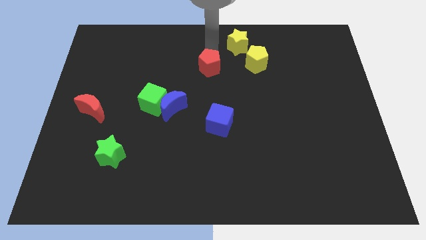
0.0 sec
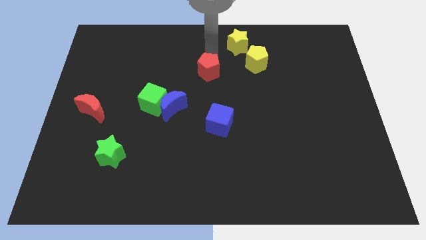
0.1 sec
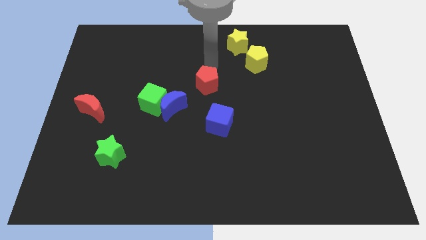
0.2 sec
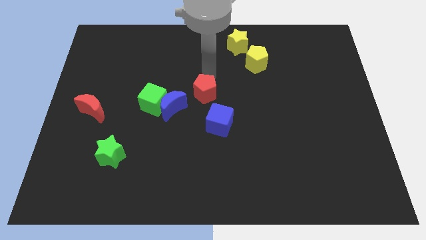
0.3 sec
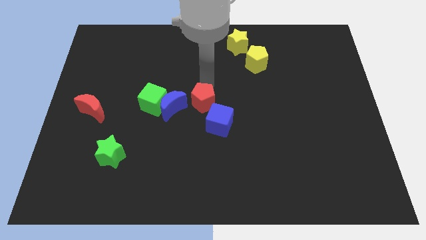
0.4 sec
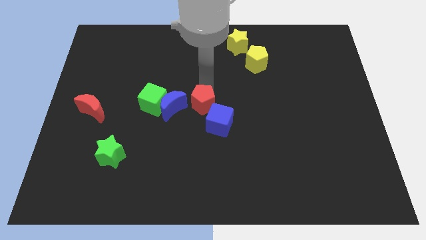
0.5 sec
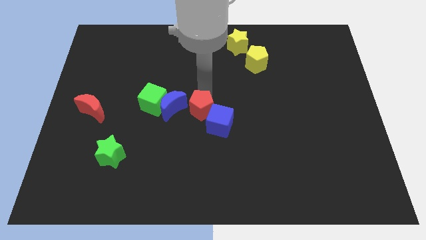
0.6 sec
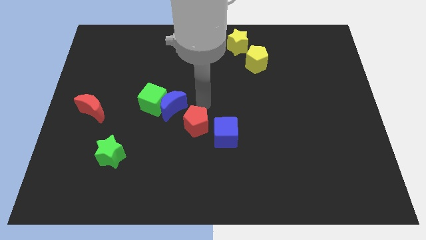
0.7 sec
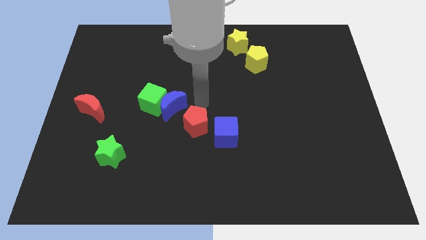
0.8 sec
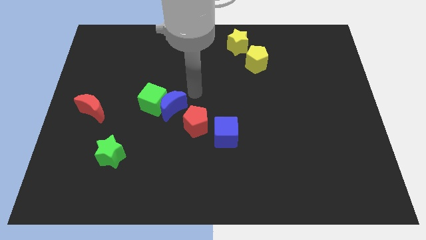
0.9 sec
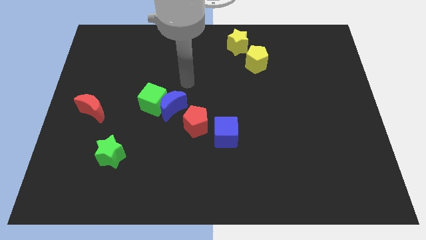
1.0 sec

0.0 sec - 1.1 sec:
push the red pentagon to the center of the board

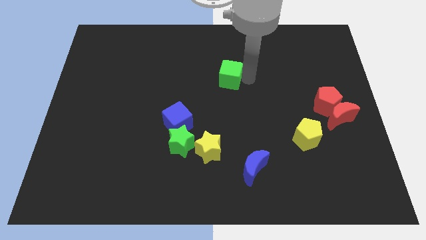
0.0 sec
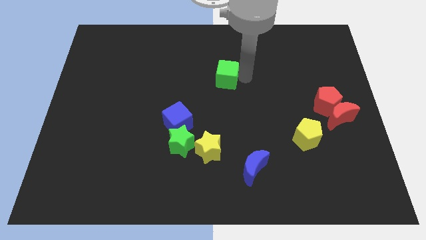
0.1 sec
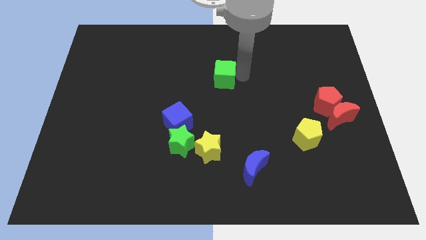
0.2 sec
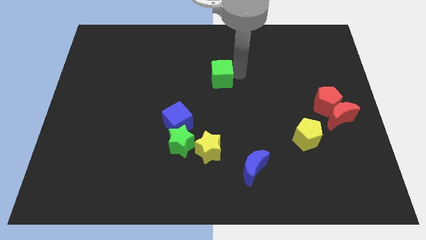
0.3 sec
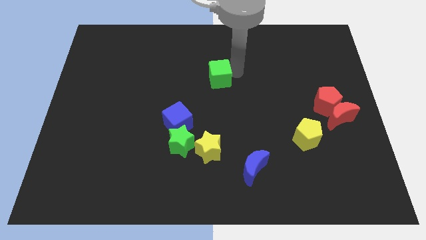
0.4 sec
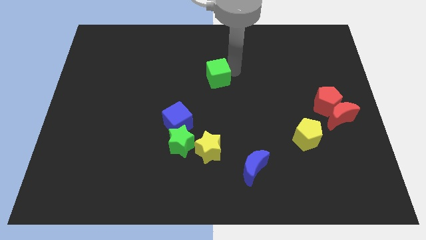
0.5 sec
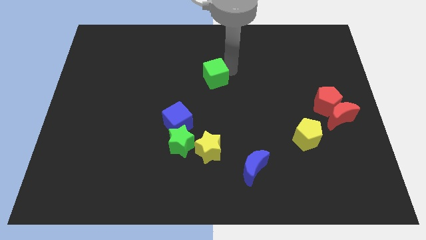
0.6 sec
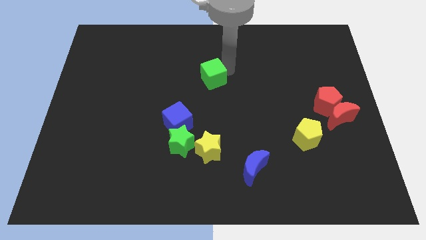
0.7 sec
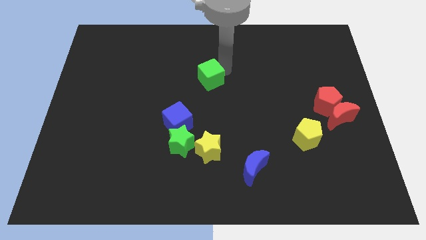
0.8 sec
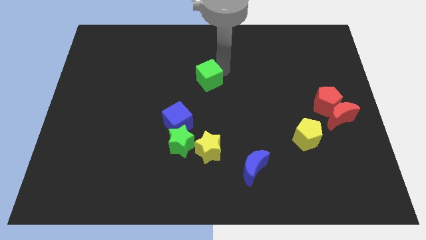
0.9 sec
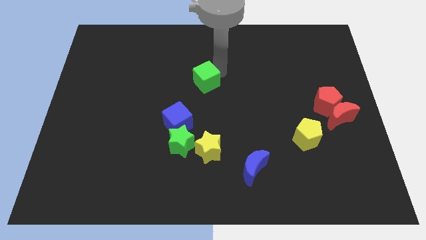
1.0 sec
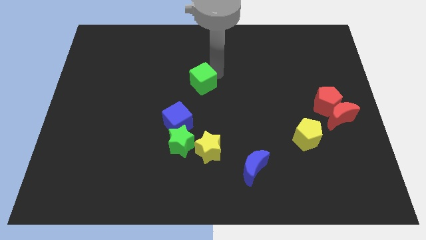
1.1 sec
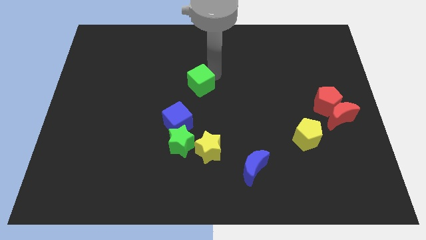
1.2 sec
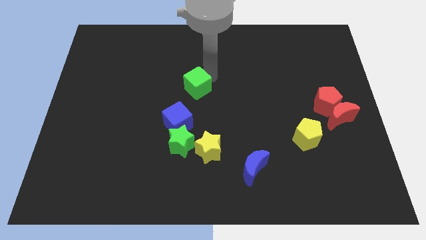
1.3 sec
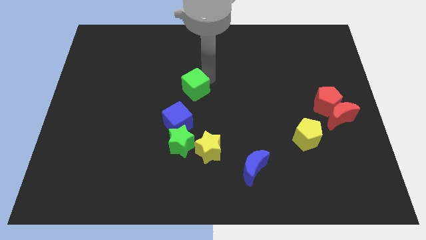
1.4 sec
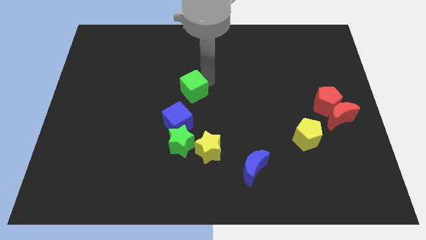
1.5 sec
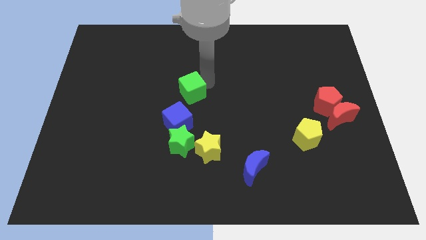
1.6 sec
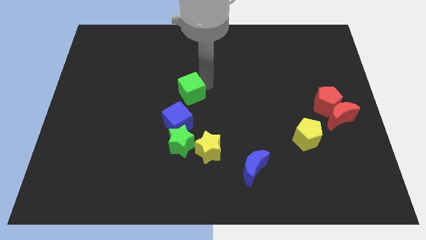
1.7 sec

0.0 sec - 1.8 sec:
move green cube towards blue cube on top

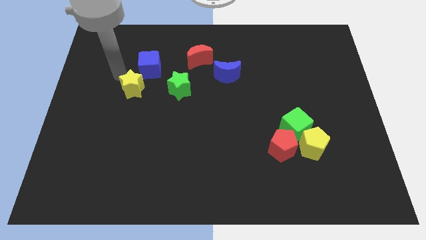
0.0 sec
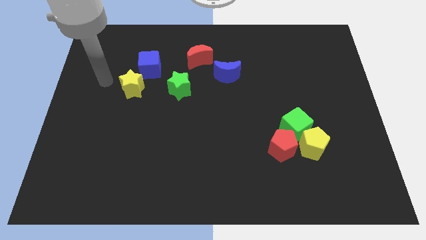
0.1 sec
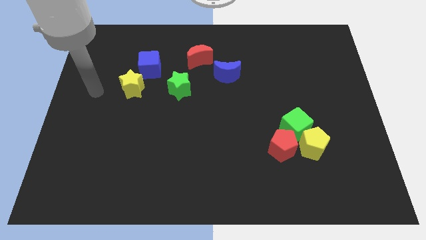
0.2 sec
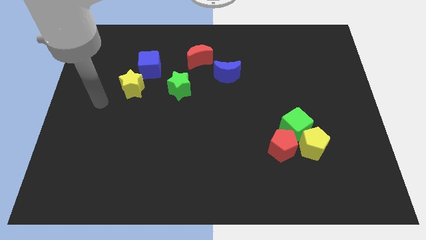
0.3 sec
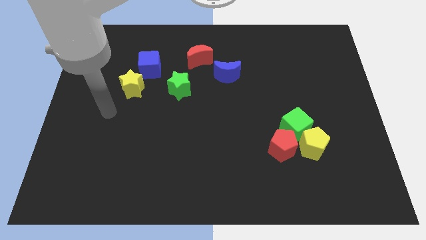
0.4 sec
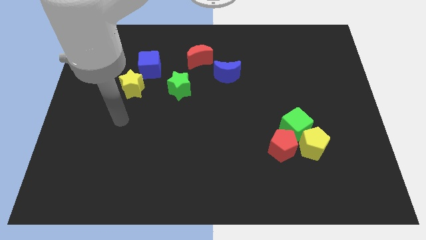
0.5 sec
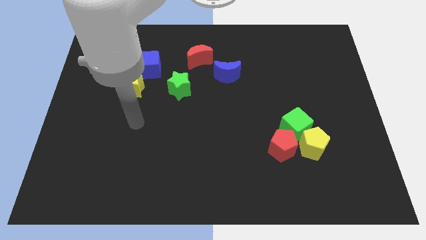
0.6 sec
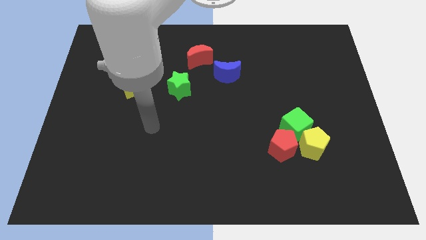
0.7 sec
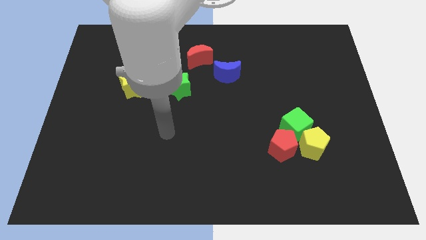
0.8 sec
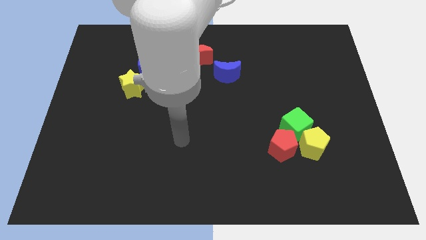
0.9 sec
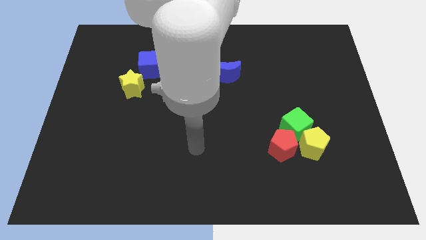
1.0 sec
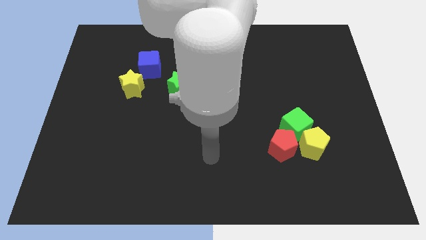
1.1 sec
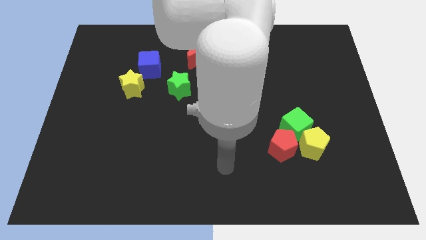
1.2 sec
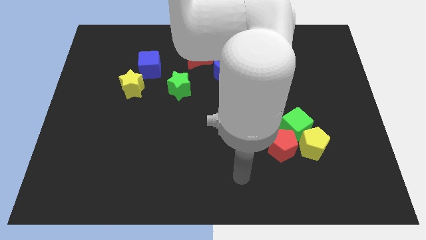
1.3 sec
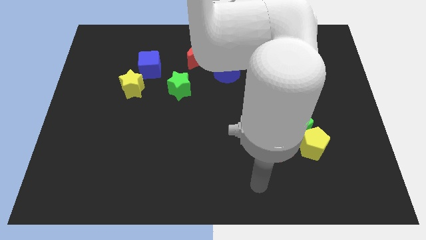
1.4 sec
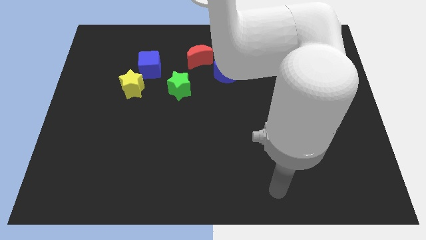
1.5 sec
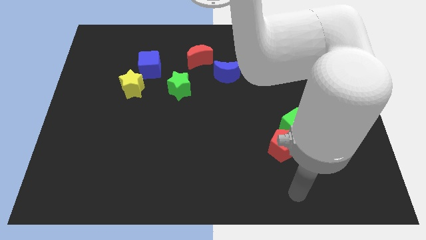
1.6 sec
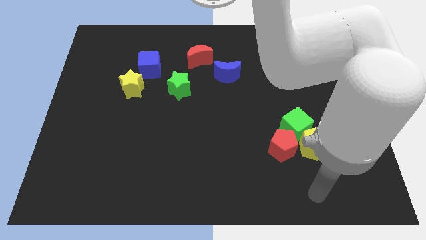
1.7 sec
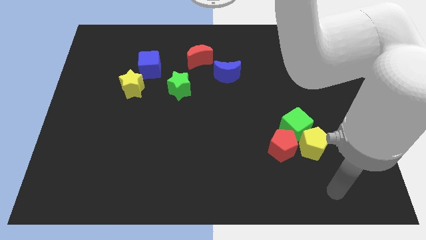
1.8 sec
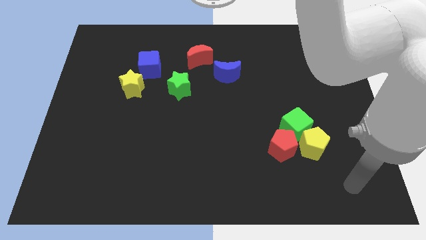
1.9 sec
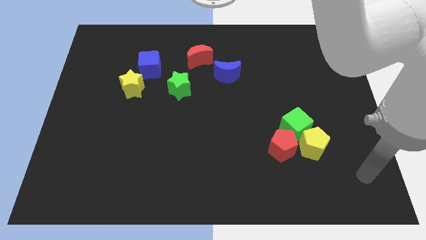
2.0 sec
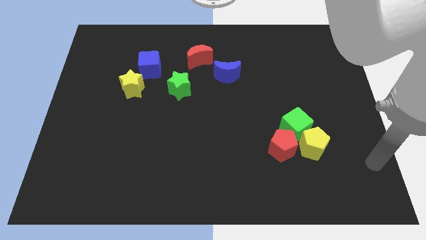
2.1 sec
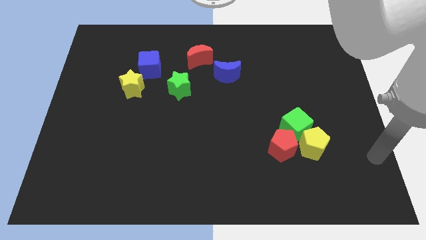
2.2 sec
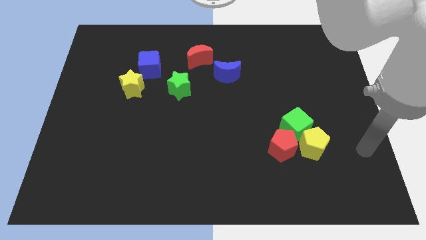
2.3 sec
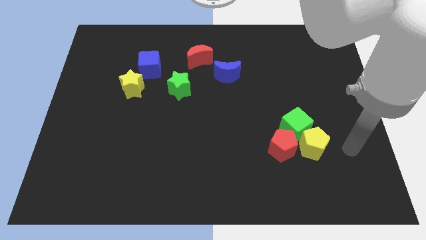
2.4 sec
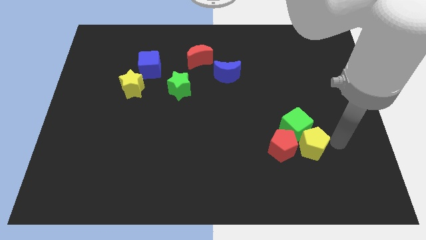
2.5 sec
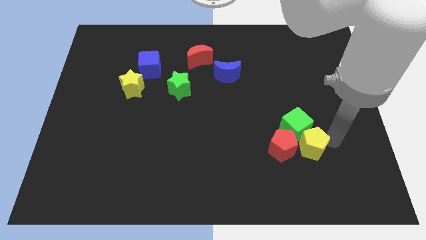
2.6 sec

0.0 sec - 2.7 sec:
point your arm at the right of the yellow pentagon

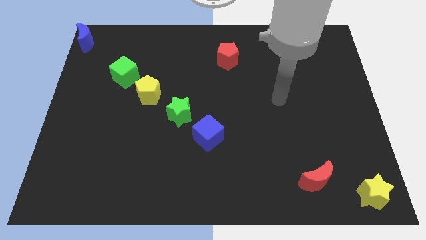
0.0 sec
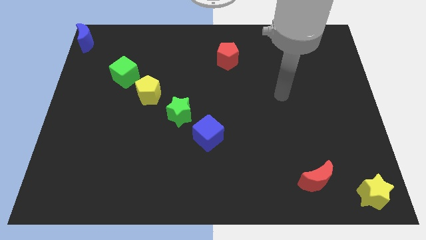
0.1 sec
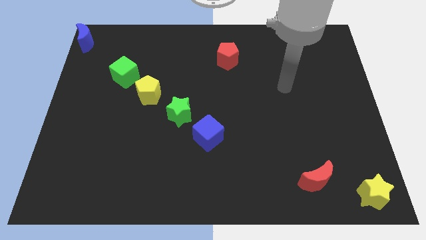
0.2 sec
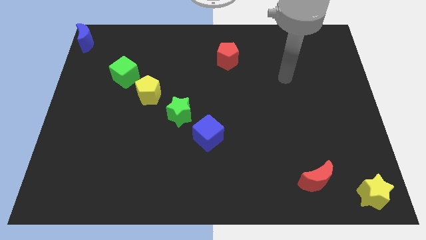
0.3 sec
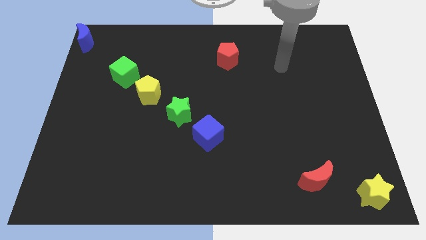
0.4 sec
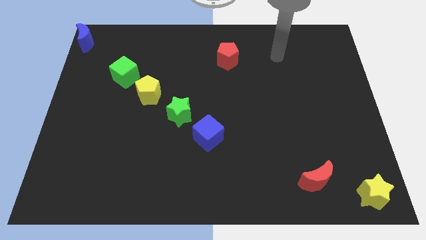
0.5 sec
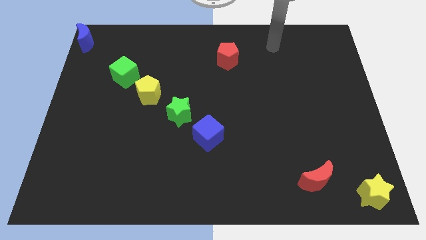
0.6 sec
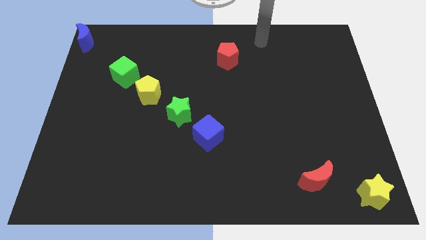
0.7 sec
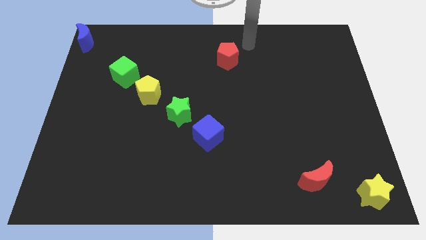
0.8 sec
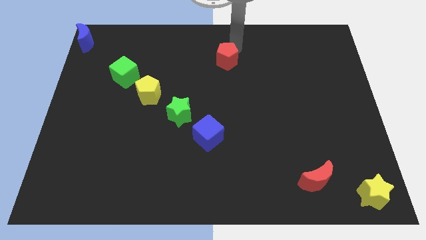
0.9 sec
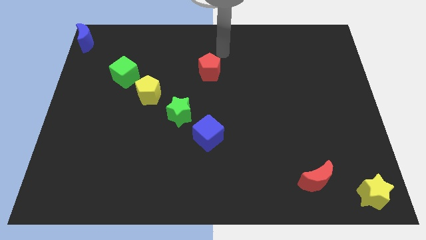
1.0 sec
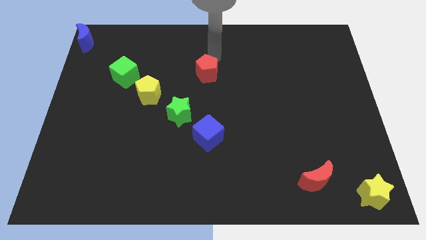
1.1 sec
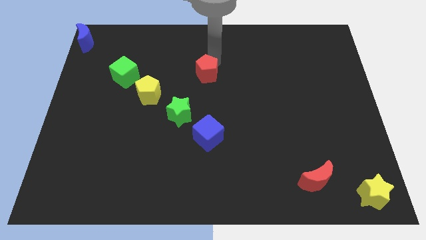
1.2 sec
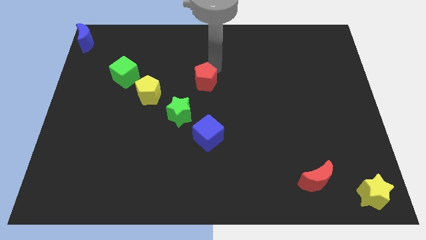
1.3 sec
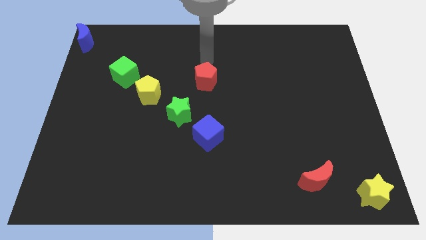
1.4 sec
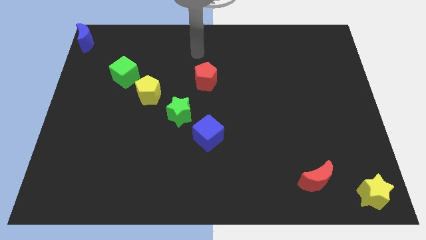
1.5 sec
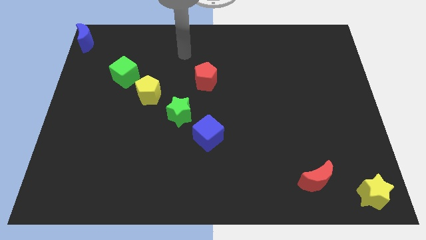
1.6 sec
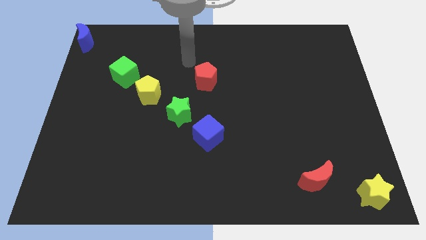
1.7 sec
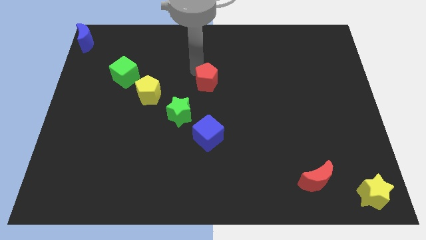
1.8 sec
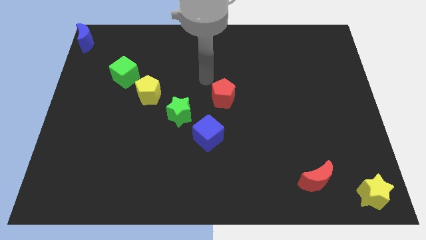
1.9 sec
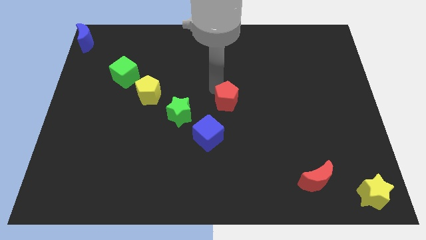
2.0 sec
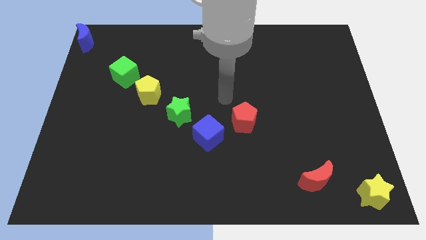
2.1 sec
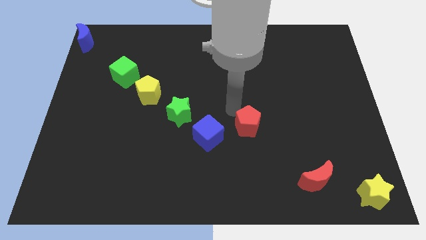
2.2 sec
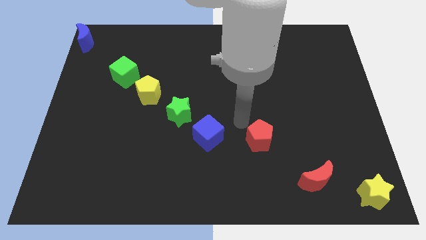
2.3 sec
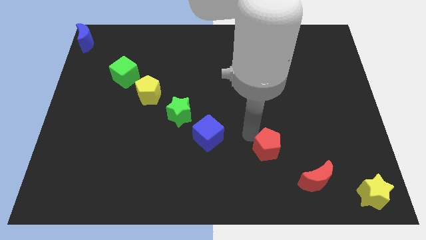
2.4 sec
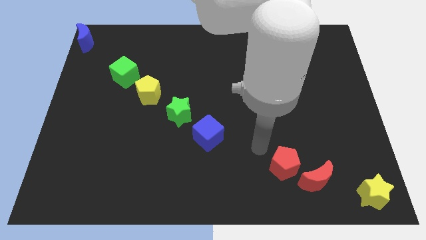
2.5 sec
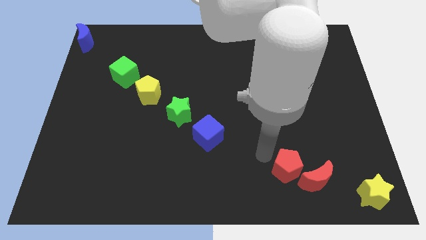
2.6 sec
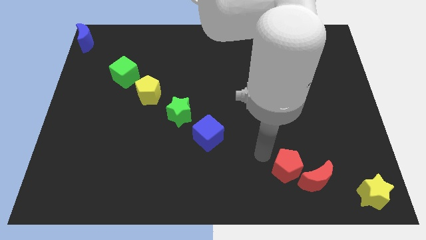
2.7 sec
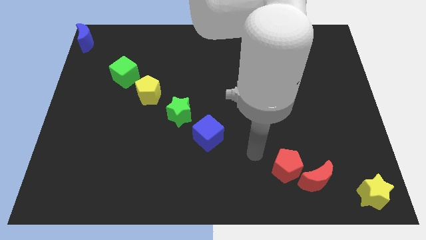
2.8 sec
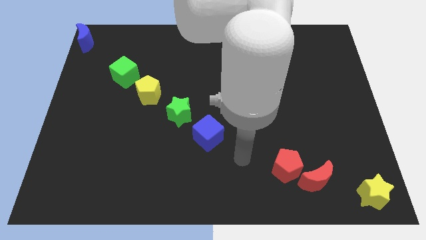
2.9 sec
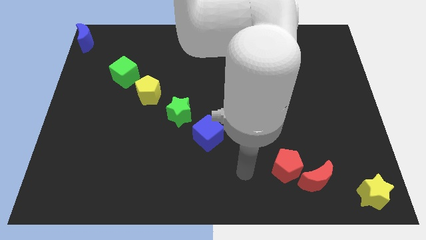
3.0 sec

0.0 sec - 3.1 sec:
push the red pentagon towards the red moon
